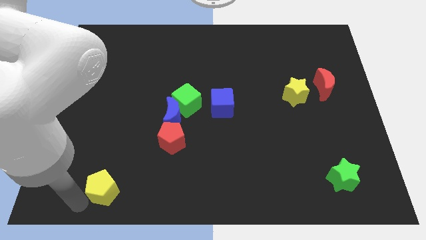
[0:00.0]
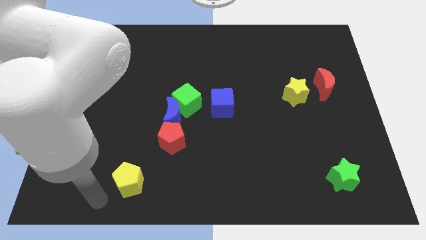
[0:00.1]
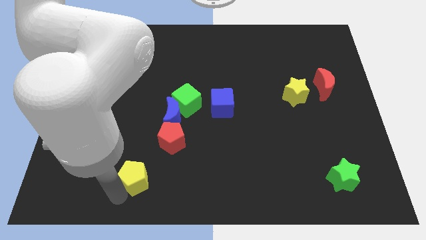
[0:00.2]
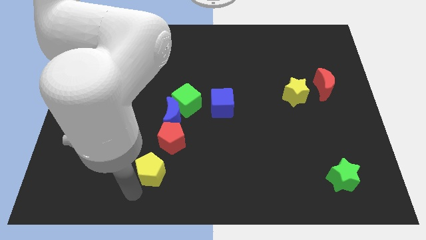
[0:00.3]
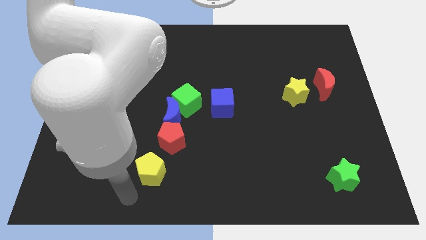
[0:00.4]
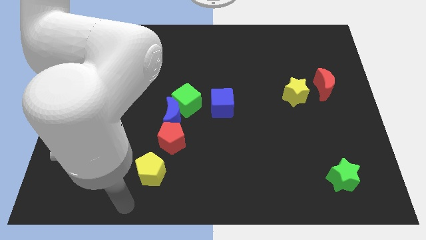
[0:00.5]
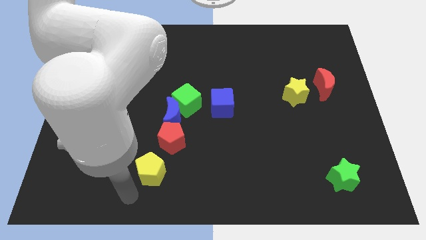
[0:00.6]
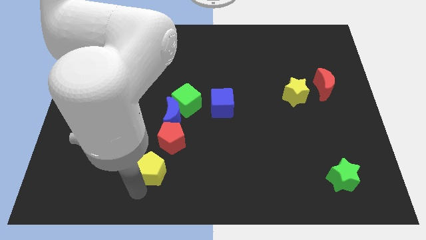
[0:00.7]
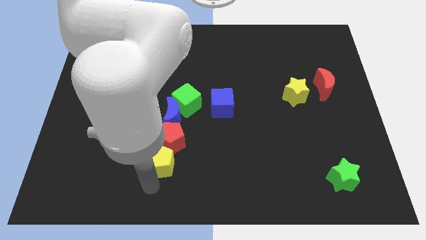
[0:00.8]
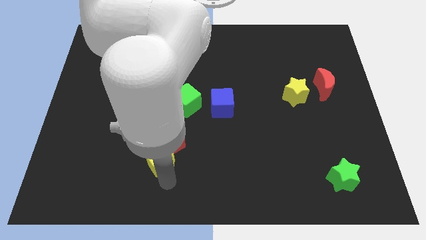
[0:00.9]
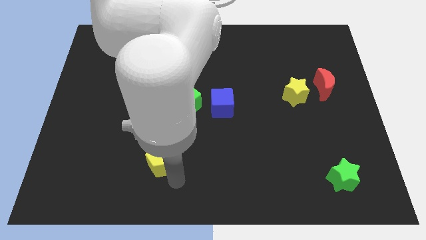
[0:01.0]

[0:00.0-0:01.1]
place yellow pentagon below red pentagon

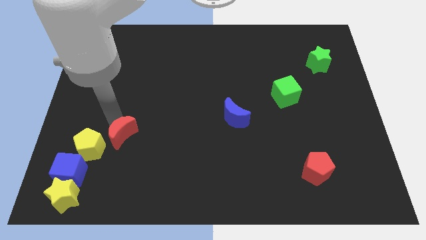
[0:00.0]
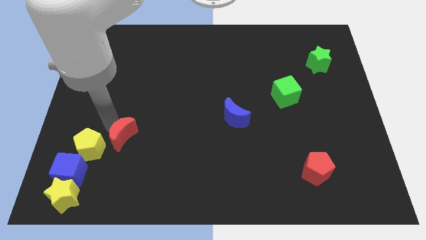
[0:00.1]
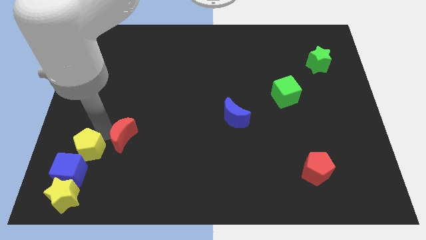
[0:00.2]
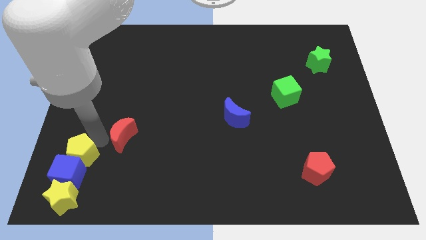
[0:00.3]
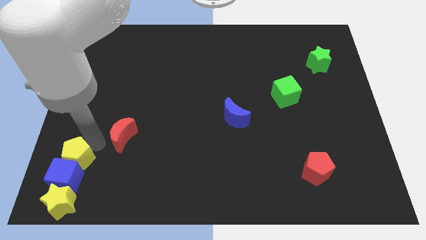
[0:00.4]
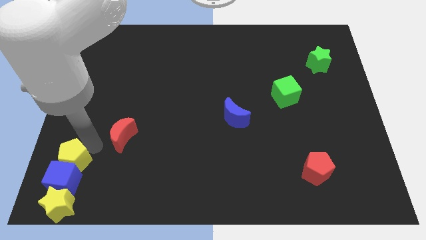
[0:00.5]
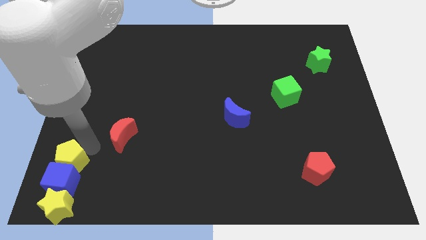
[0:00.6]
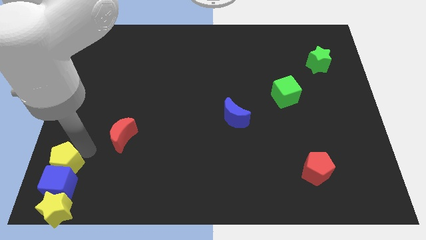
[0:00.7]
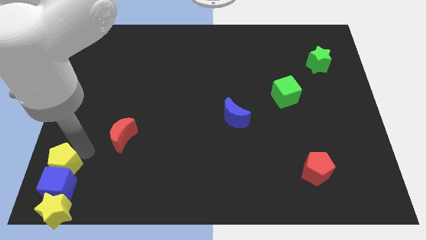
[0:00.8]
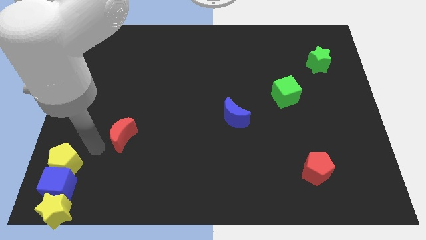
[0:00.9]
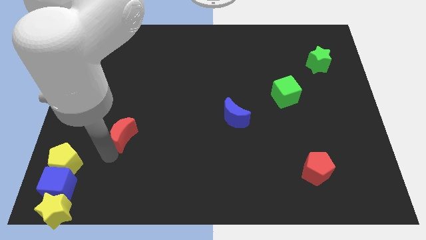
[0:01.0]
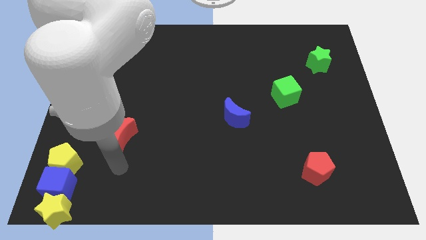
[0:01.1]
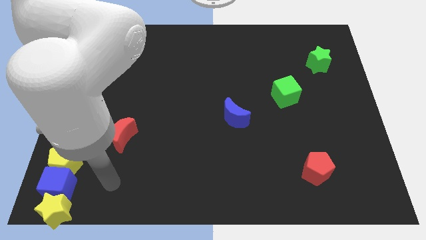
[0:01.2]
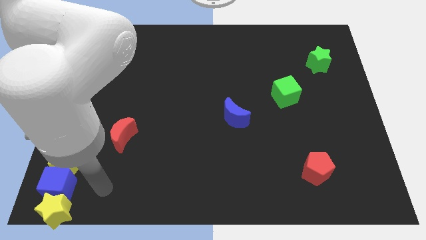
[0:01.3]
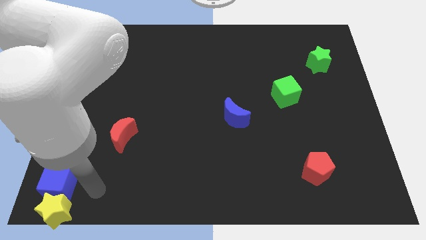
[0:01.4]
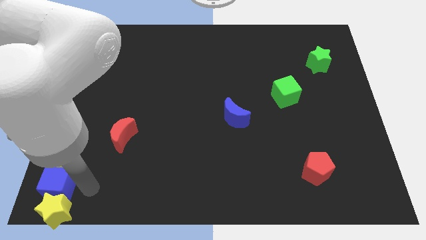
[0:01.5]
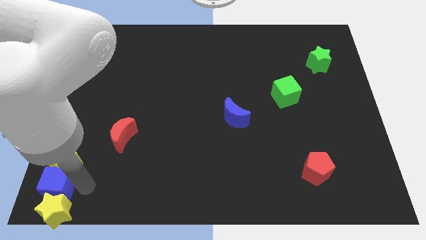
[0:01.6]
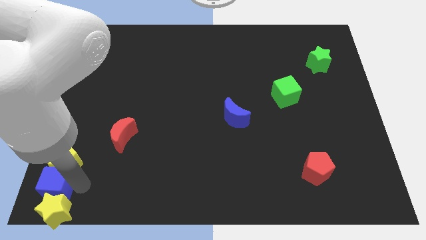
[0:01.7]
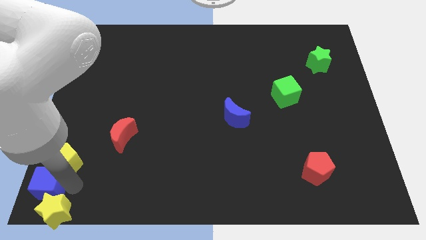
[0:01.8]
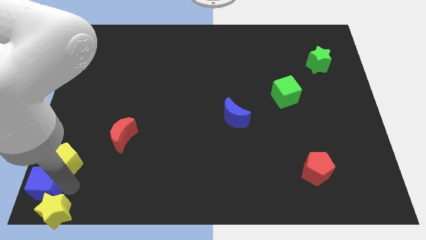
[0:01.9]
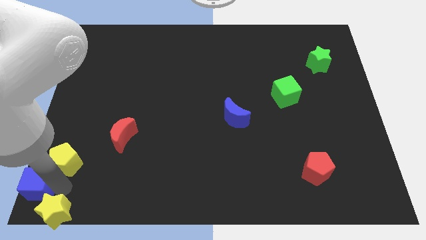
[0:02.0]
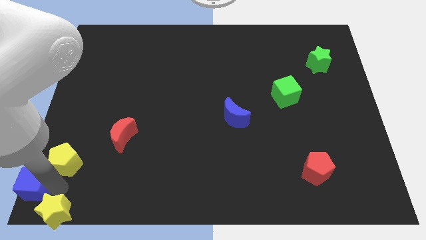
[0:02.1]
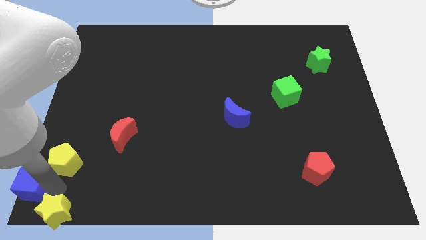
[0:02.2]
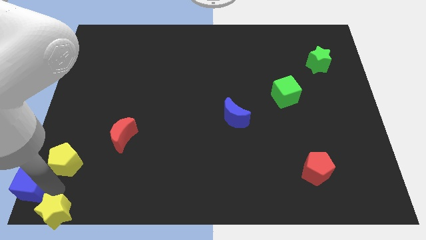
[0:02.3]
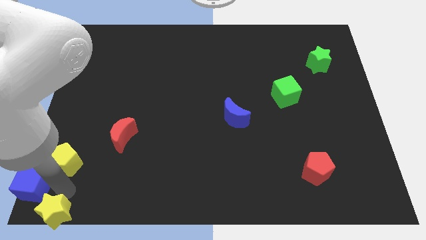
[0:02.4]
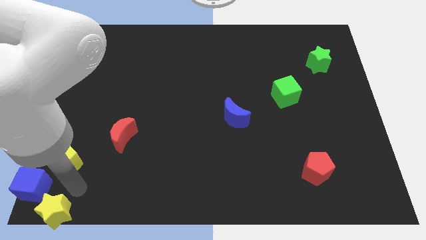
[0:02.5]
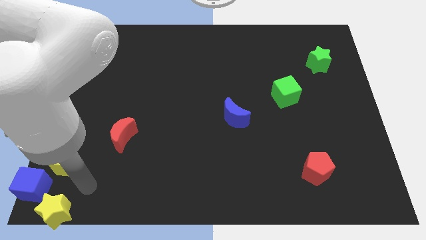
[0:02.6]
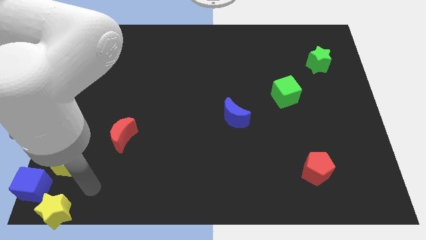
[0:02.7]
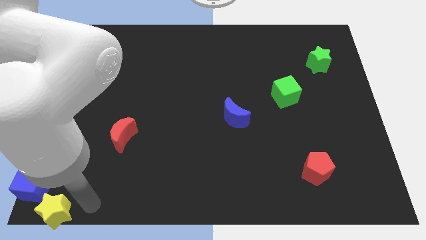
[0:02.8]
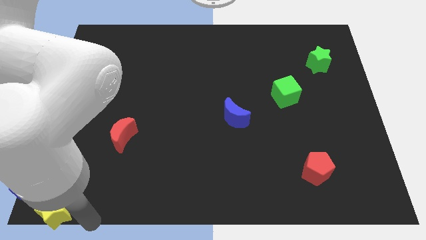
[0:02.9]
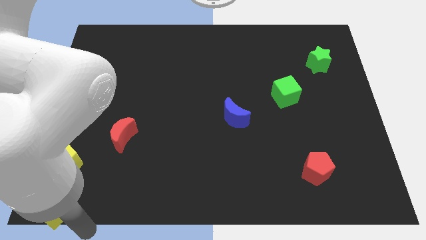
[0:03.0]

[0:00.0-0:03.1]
move blue cube away from yellow star

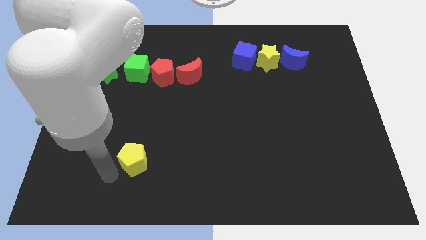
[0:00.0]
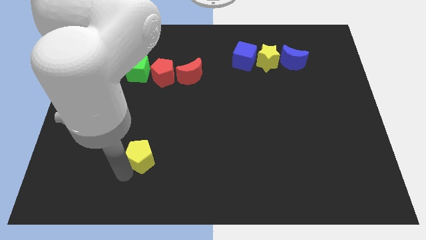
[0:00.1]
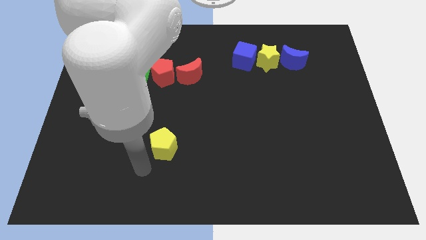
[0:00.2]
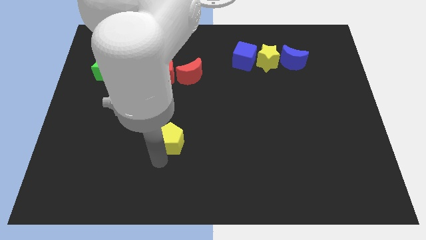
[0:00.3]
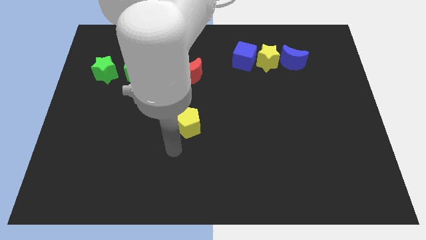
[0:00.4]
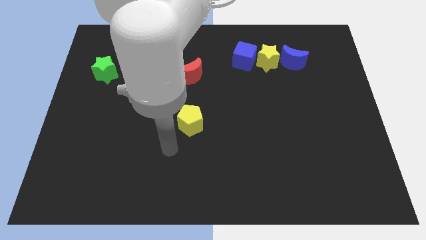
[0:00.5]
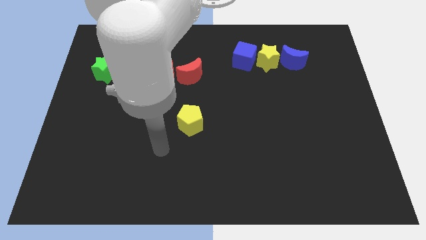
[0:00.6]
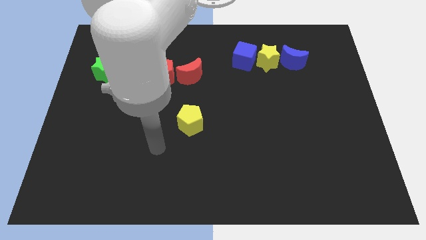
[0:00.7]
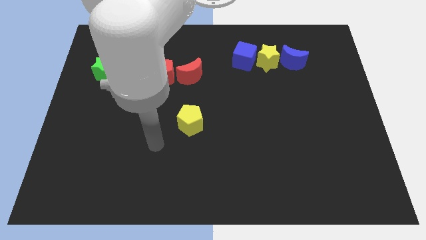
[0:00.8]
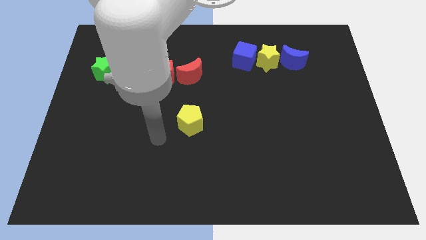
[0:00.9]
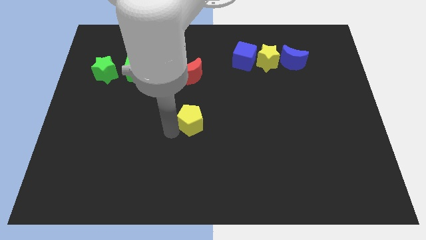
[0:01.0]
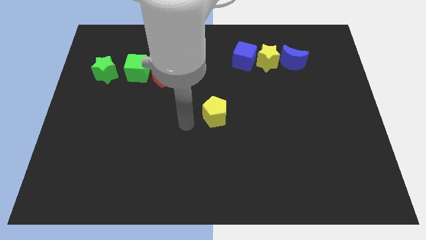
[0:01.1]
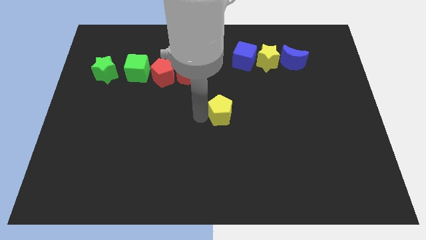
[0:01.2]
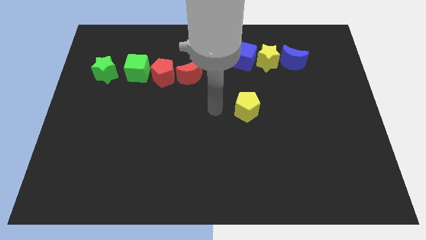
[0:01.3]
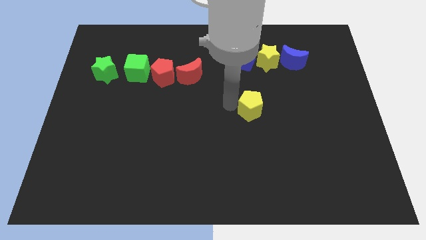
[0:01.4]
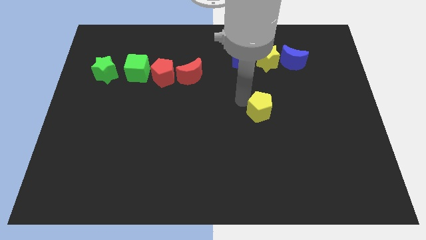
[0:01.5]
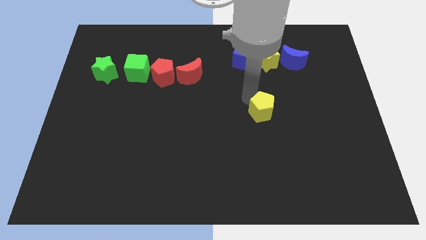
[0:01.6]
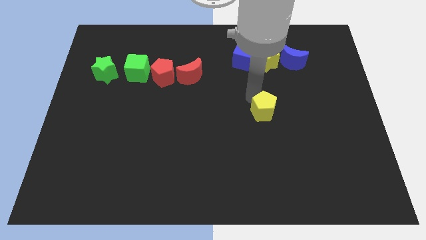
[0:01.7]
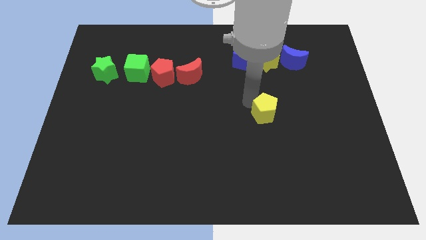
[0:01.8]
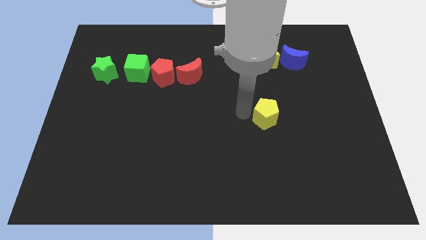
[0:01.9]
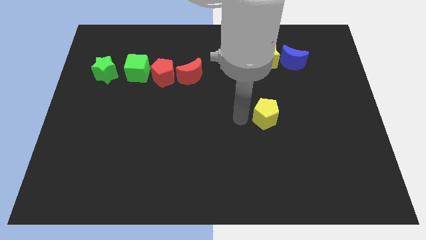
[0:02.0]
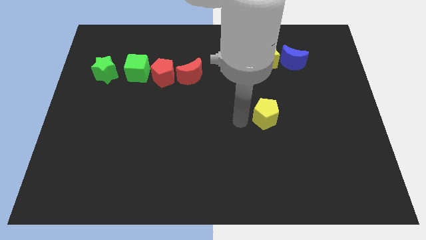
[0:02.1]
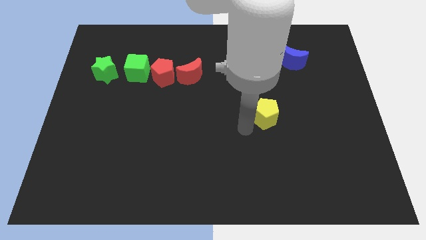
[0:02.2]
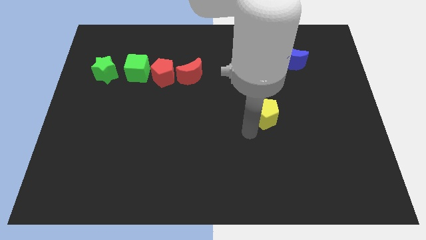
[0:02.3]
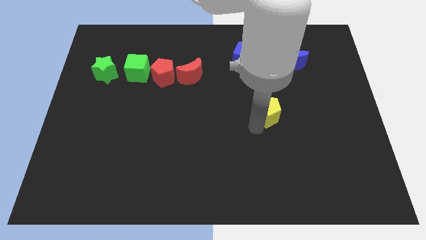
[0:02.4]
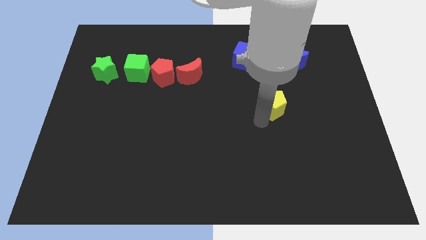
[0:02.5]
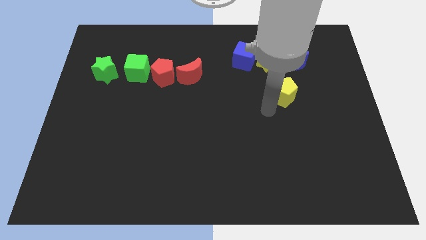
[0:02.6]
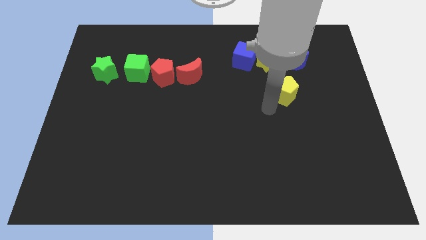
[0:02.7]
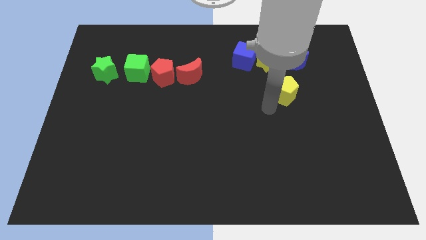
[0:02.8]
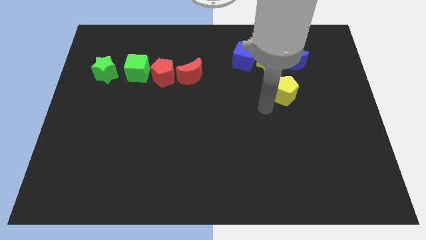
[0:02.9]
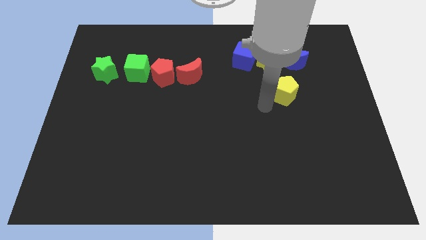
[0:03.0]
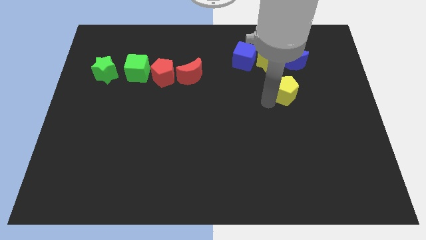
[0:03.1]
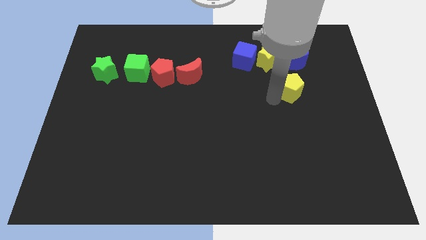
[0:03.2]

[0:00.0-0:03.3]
slide the yellow pentagon to the bottom side of the blue moon

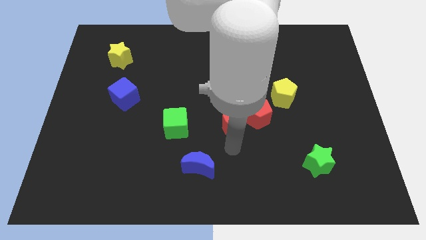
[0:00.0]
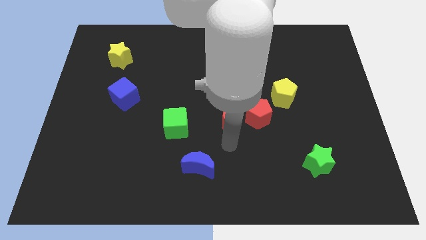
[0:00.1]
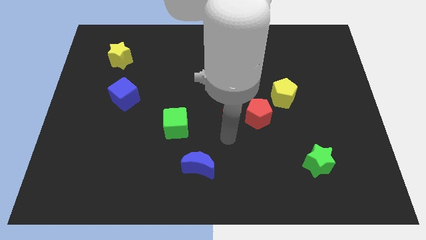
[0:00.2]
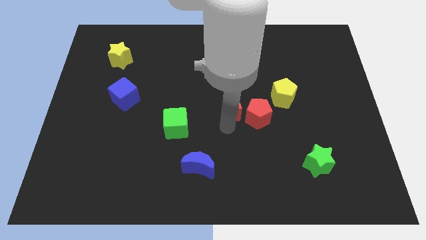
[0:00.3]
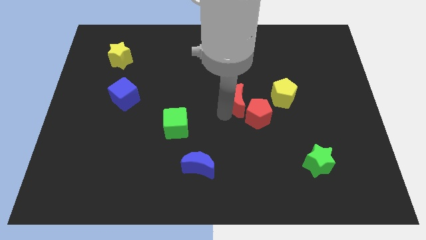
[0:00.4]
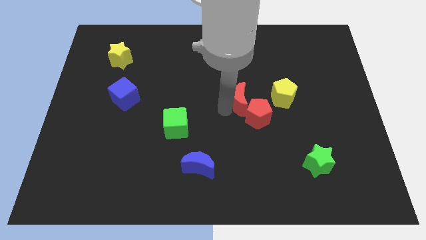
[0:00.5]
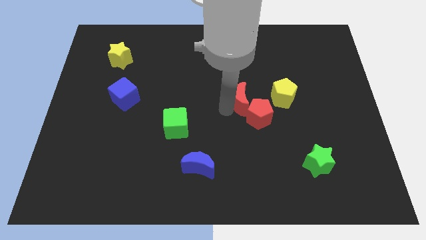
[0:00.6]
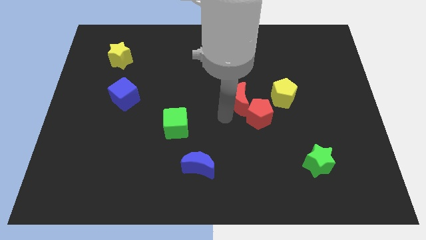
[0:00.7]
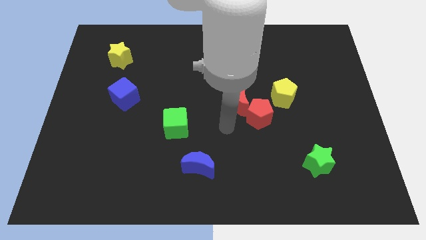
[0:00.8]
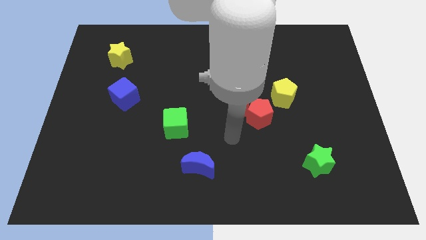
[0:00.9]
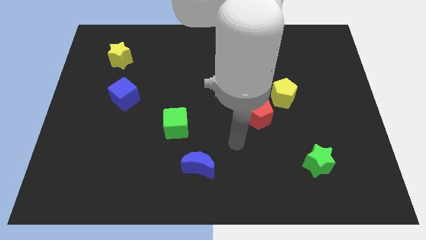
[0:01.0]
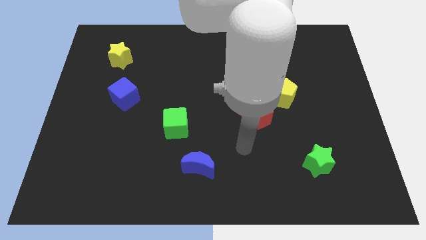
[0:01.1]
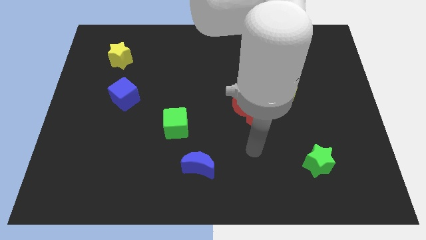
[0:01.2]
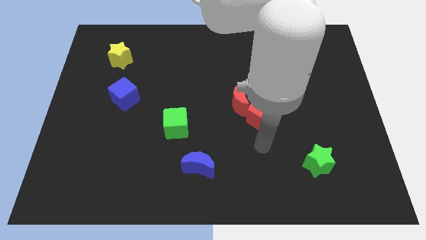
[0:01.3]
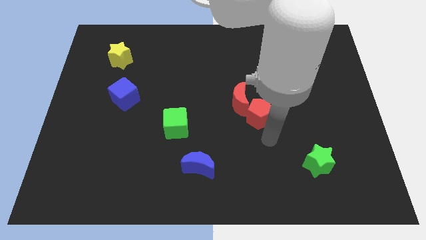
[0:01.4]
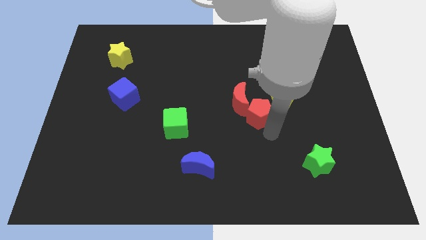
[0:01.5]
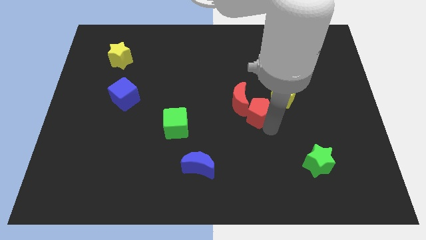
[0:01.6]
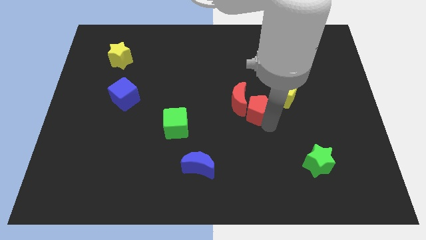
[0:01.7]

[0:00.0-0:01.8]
reposition the red crescent
